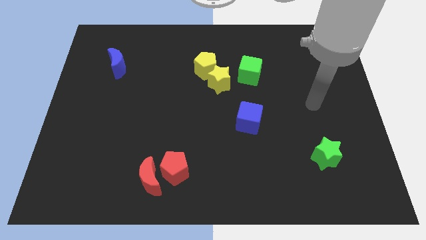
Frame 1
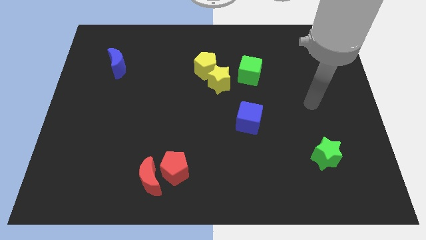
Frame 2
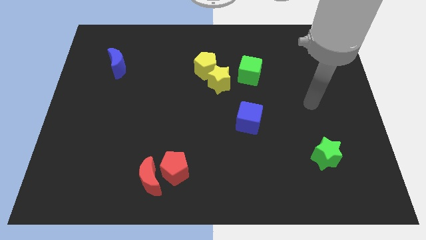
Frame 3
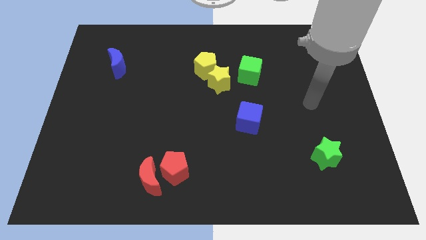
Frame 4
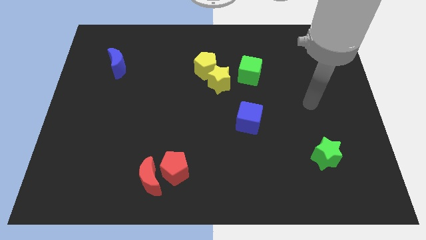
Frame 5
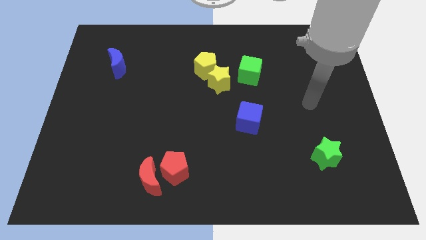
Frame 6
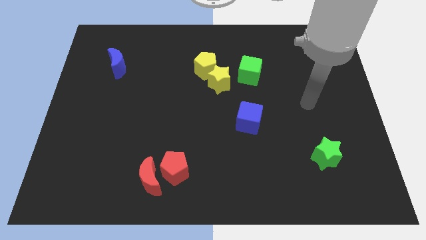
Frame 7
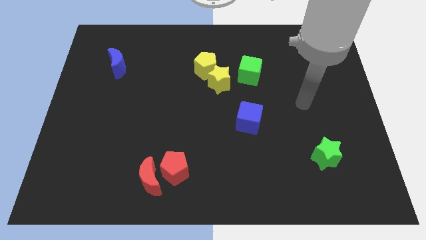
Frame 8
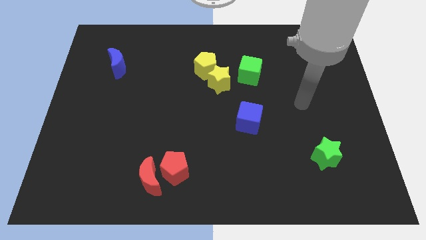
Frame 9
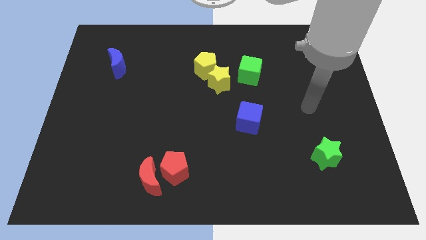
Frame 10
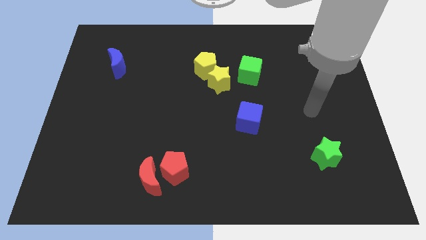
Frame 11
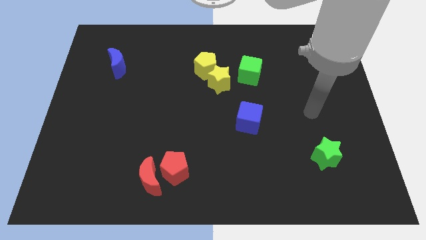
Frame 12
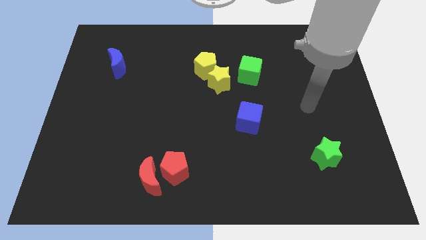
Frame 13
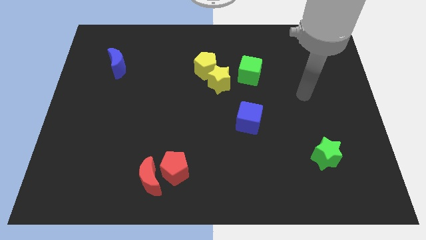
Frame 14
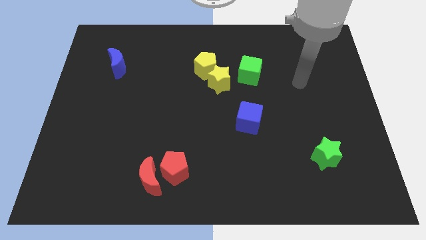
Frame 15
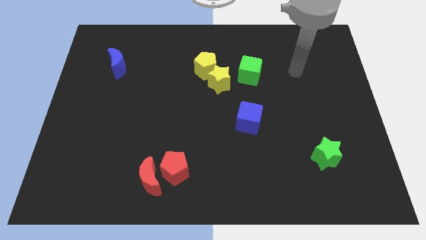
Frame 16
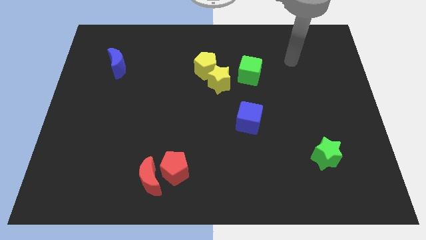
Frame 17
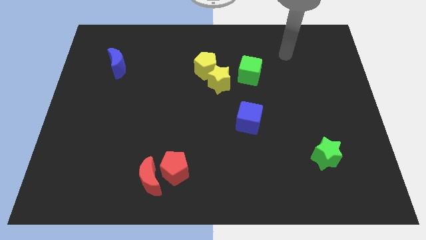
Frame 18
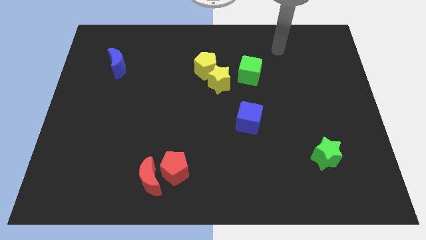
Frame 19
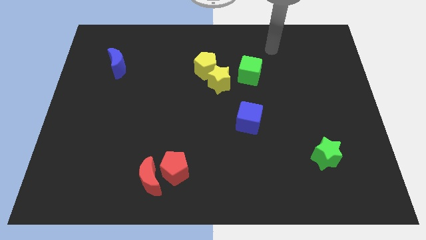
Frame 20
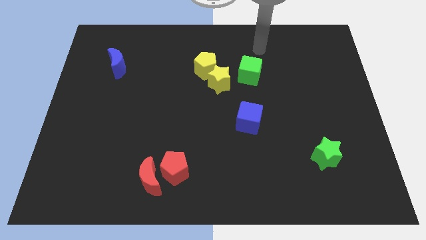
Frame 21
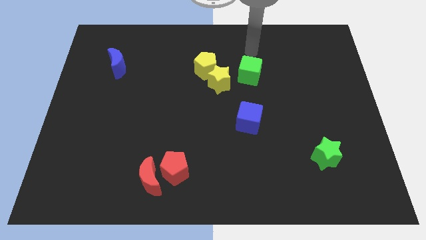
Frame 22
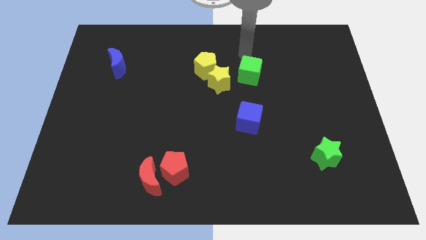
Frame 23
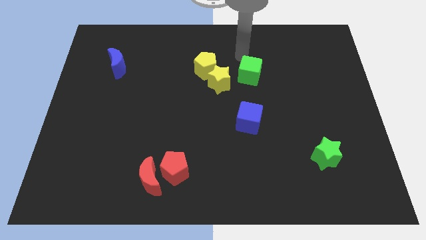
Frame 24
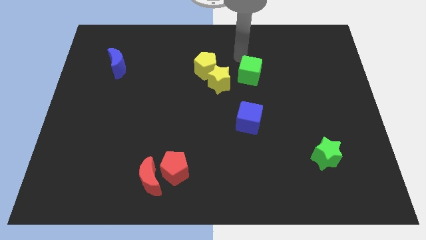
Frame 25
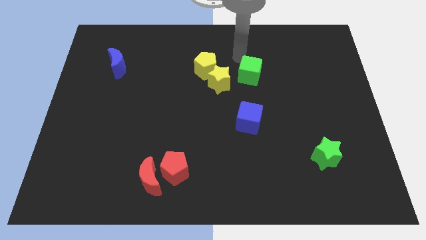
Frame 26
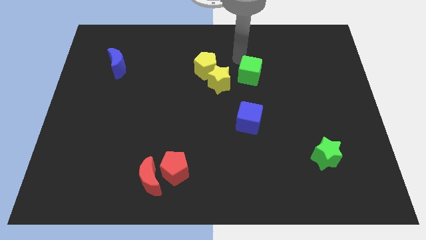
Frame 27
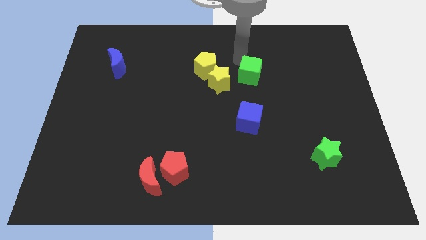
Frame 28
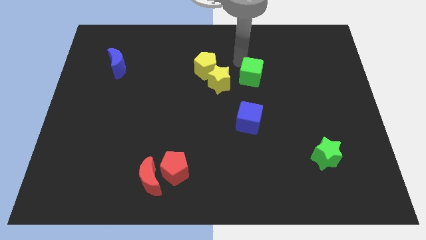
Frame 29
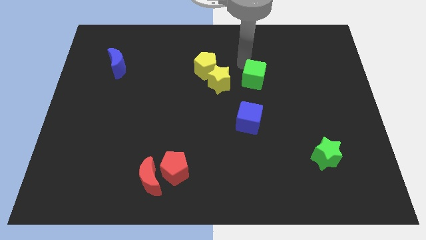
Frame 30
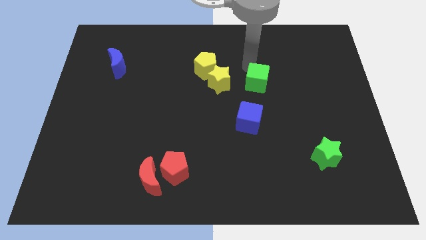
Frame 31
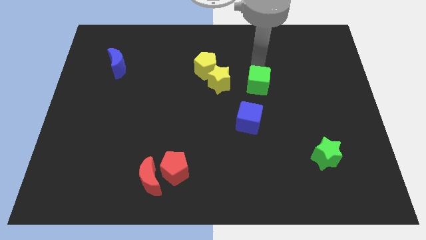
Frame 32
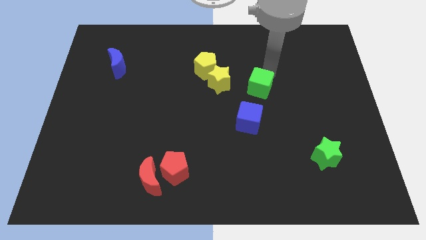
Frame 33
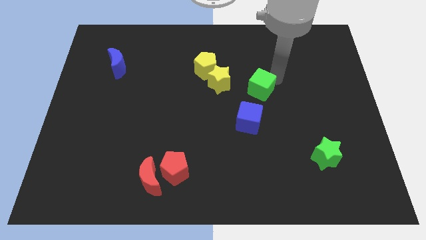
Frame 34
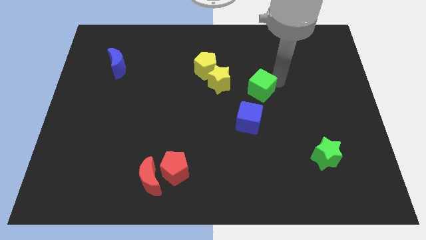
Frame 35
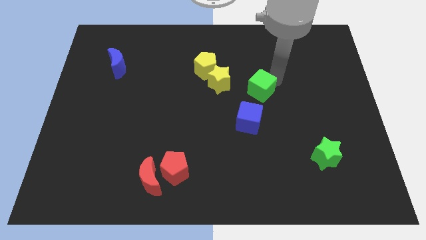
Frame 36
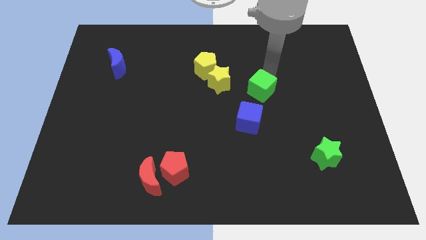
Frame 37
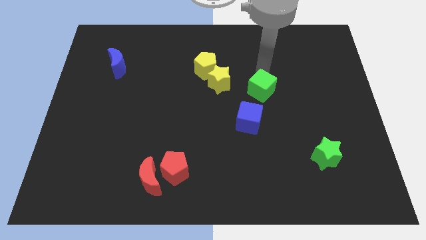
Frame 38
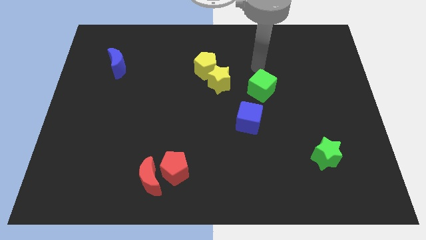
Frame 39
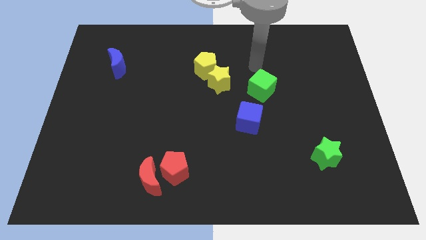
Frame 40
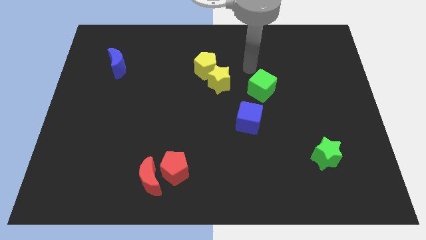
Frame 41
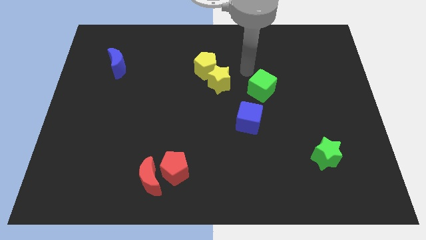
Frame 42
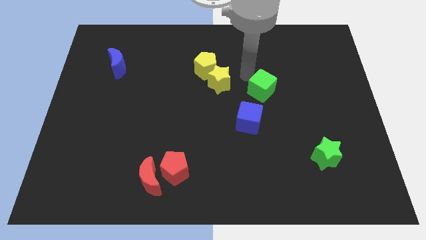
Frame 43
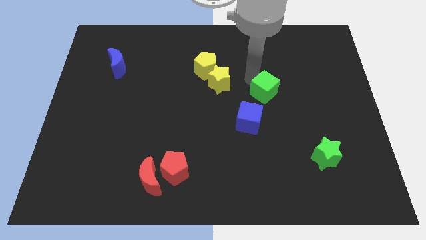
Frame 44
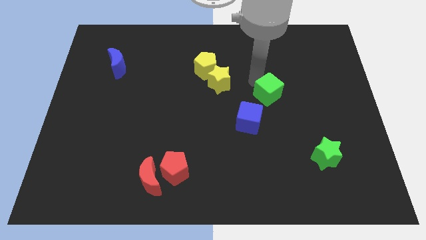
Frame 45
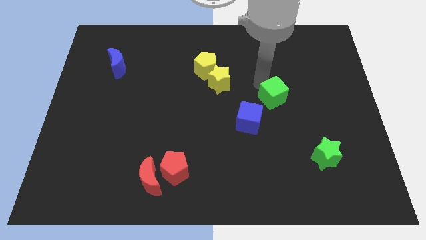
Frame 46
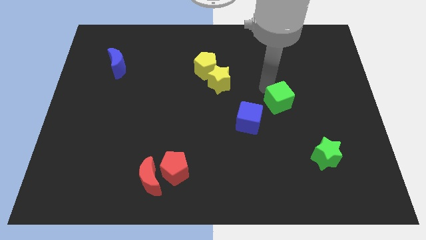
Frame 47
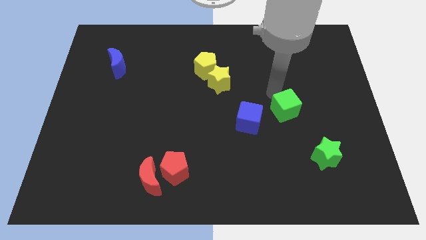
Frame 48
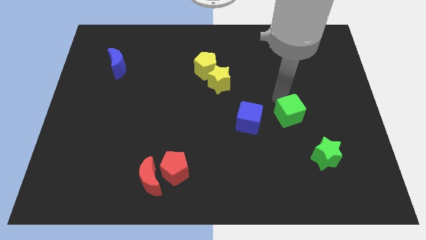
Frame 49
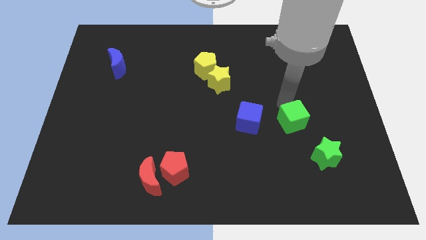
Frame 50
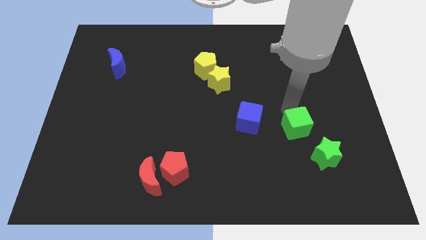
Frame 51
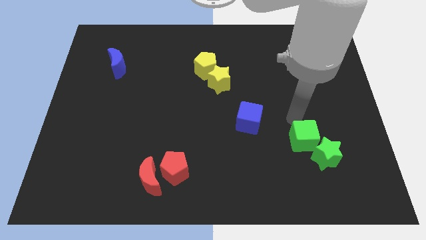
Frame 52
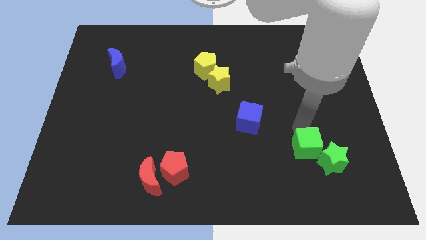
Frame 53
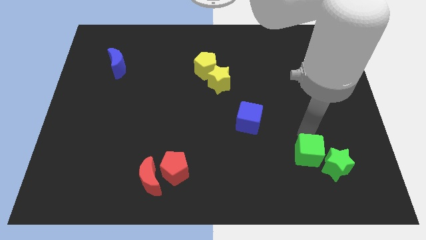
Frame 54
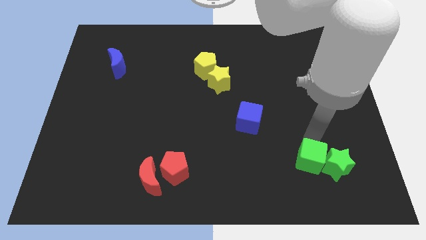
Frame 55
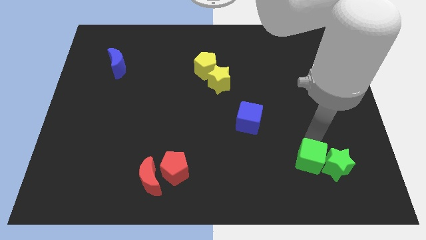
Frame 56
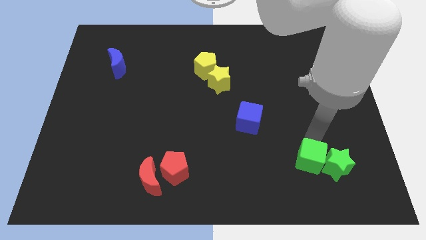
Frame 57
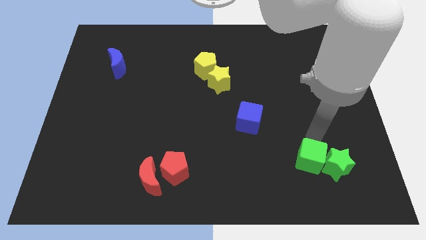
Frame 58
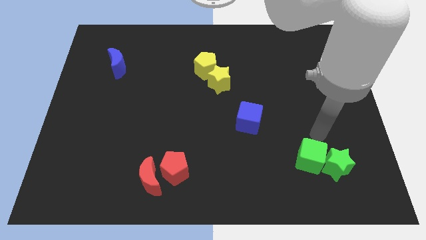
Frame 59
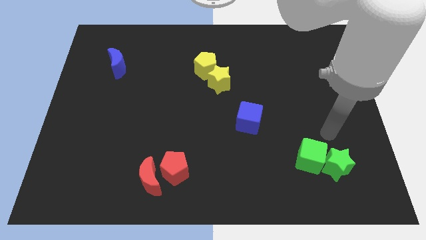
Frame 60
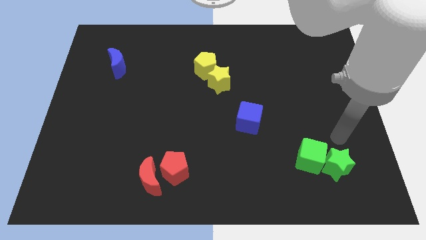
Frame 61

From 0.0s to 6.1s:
push the green cube into green star

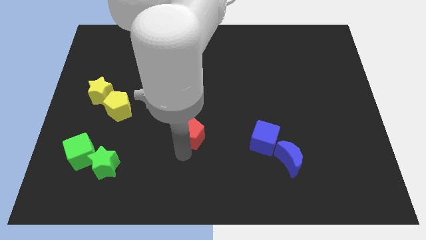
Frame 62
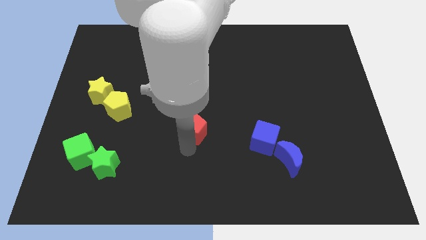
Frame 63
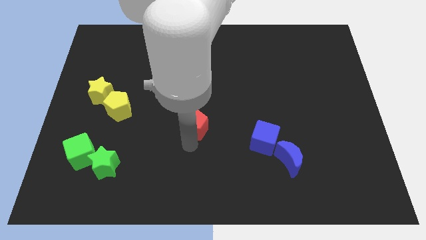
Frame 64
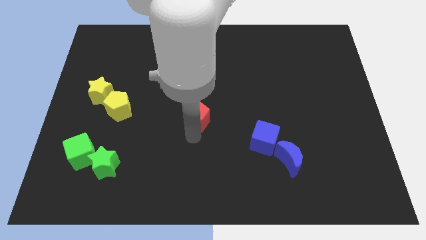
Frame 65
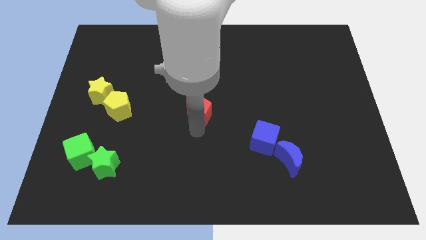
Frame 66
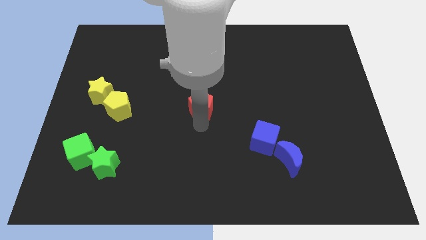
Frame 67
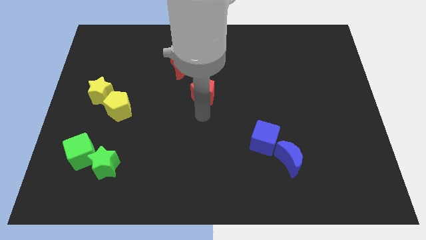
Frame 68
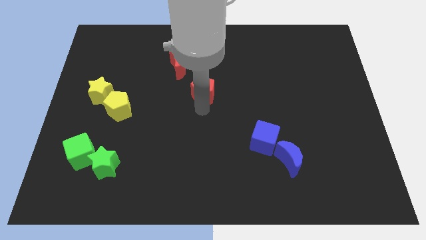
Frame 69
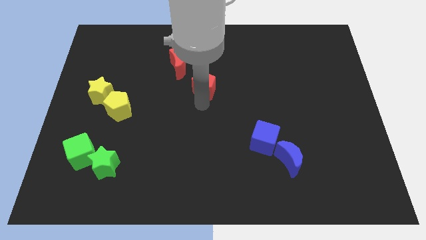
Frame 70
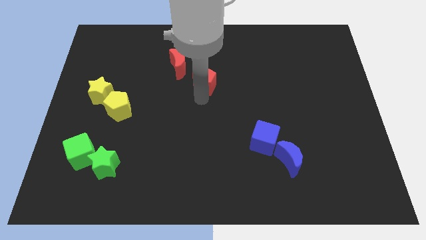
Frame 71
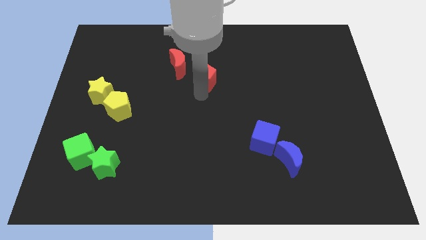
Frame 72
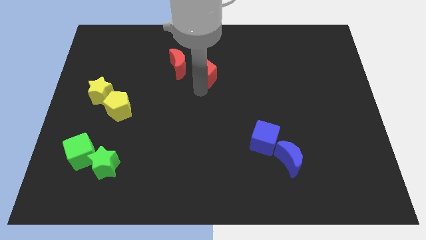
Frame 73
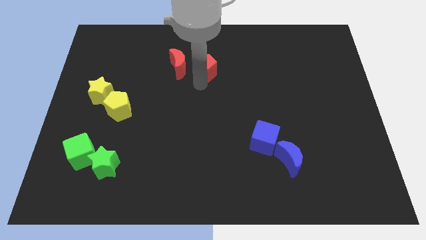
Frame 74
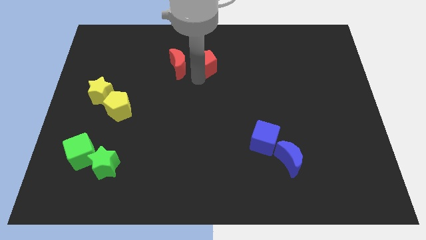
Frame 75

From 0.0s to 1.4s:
move the red pentagon to the right side of the red crescent

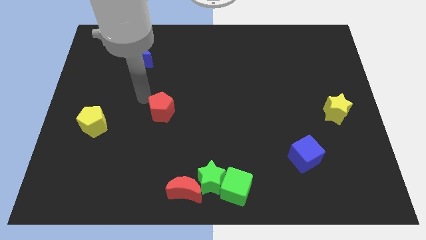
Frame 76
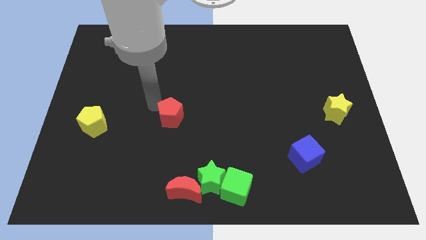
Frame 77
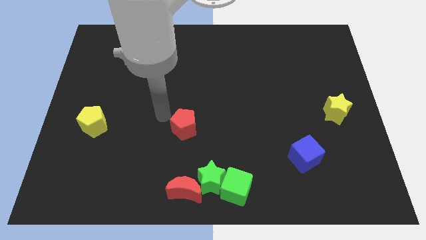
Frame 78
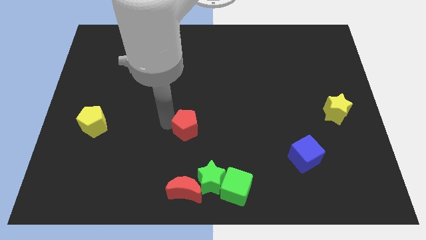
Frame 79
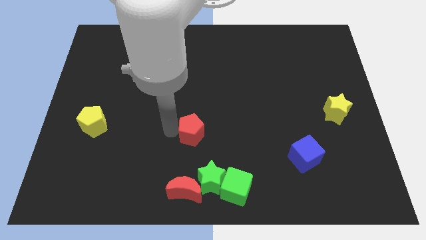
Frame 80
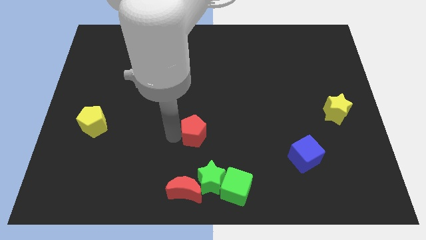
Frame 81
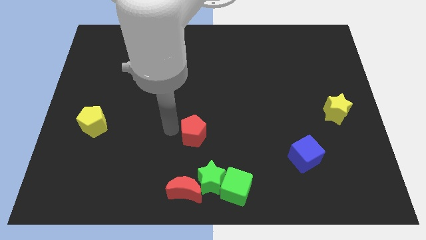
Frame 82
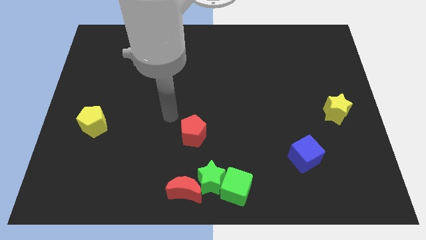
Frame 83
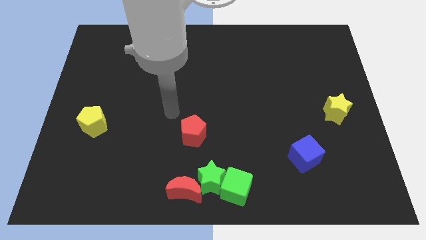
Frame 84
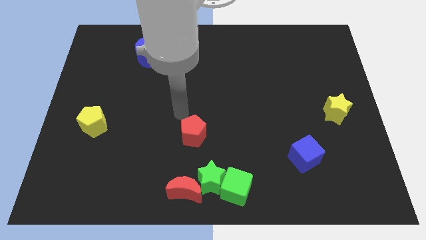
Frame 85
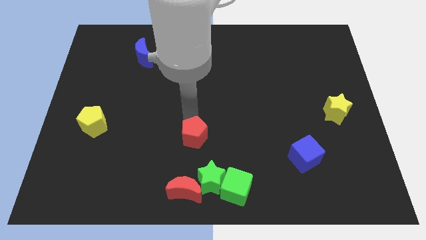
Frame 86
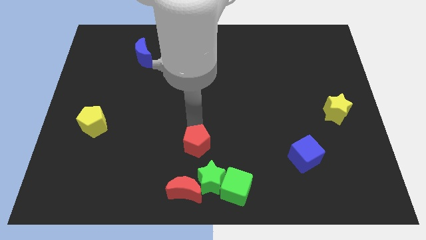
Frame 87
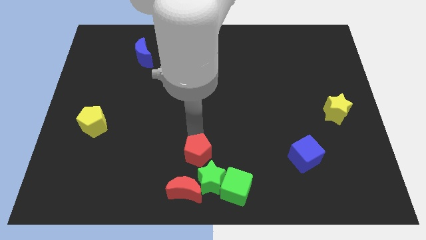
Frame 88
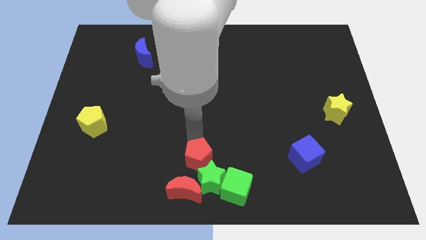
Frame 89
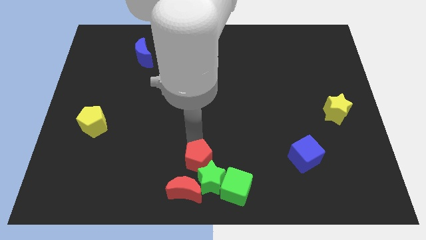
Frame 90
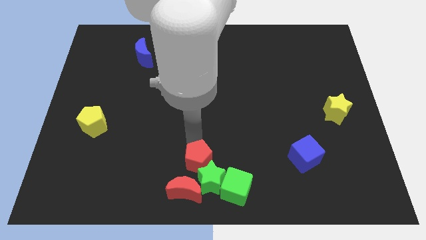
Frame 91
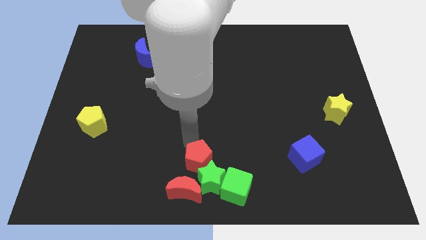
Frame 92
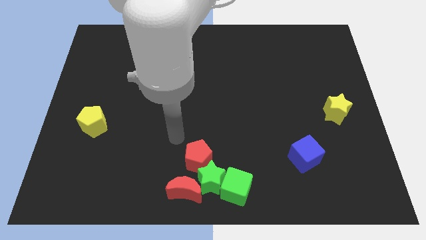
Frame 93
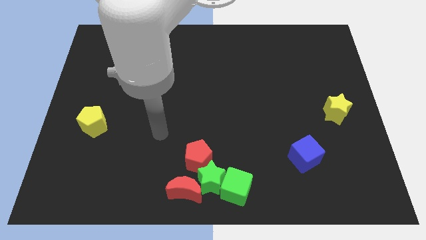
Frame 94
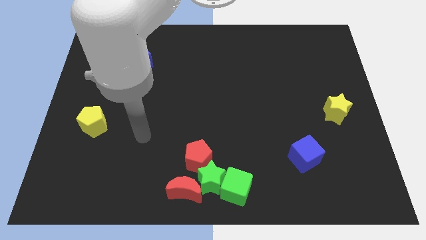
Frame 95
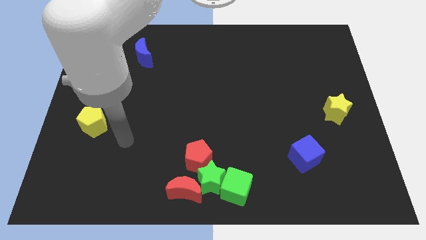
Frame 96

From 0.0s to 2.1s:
move the red pentagon close to the green star
